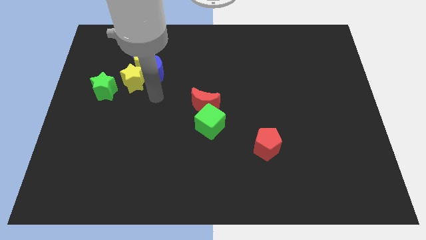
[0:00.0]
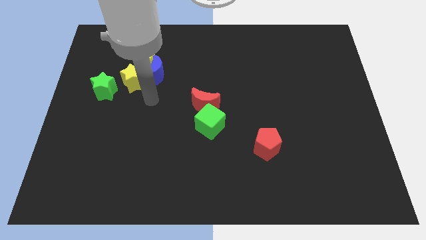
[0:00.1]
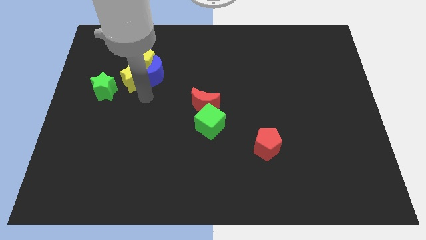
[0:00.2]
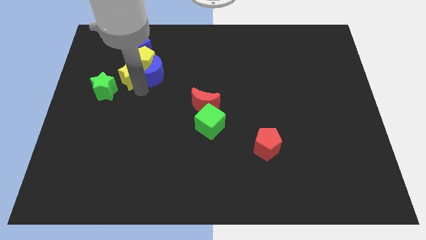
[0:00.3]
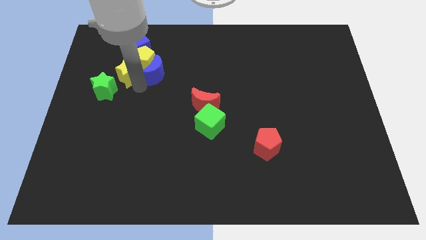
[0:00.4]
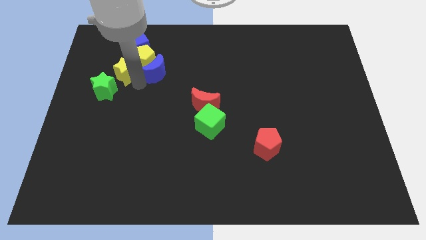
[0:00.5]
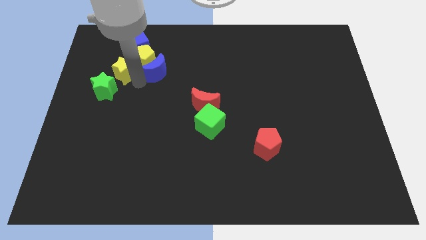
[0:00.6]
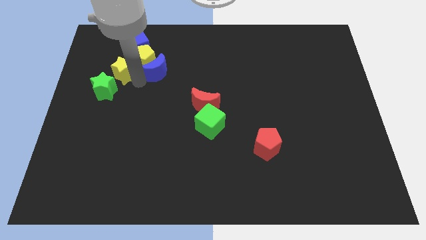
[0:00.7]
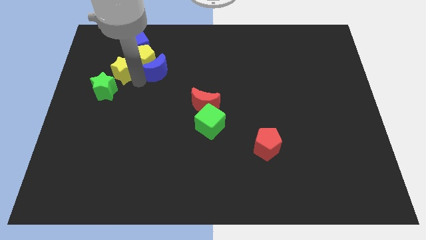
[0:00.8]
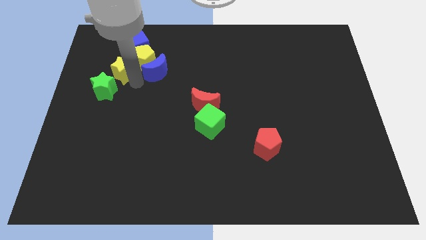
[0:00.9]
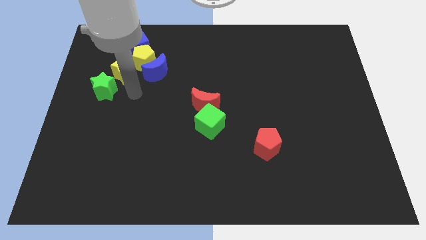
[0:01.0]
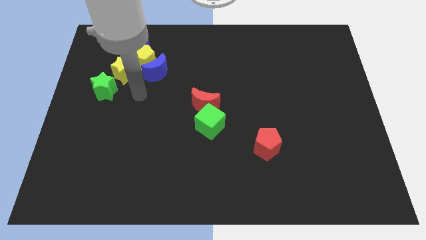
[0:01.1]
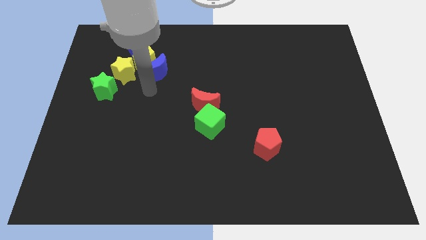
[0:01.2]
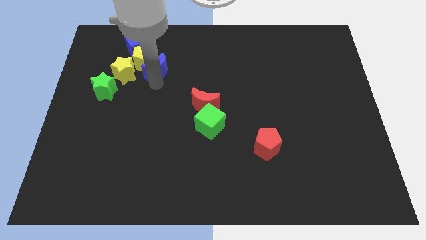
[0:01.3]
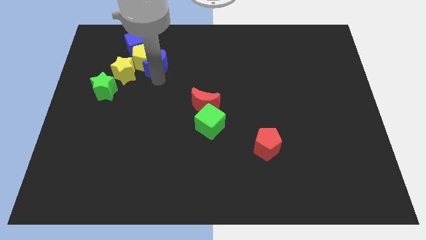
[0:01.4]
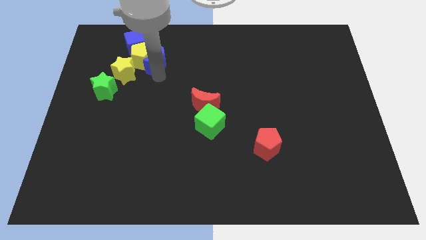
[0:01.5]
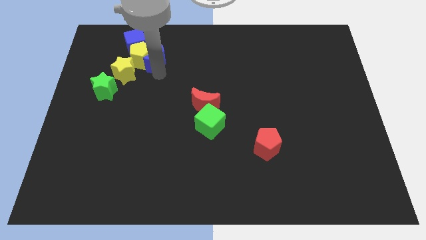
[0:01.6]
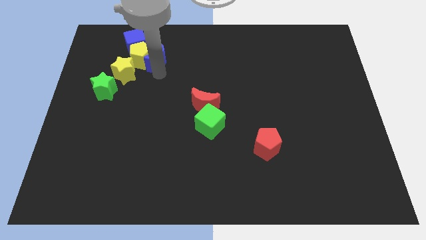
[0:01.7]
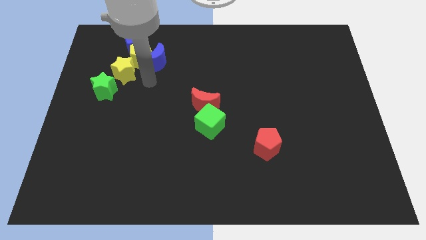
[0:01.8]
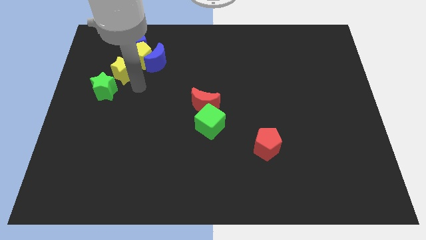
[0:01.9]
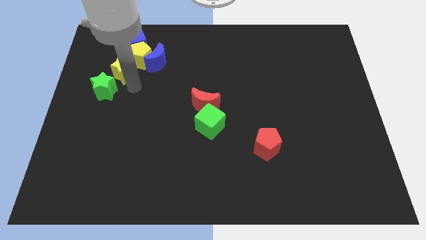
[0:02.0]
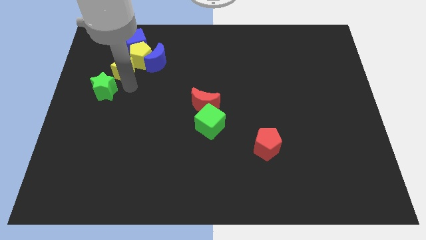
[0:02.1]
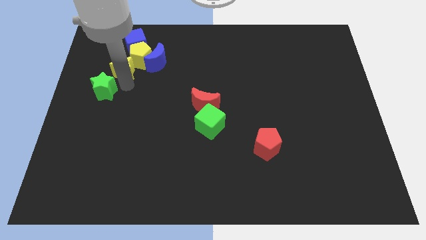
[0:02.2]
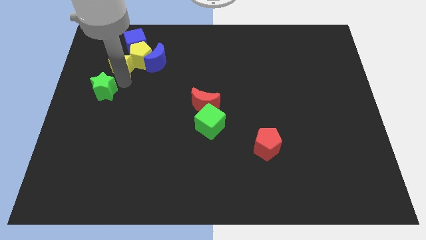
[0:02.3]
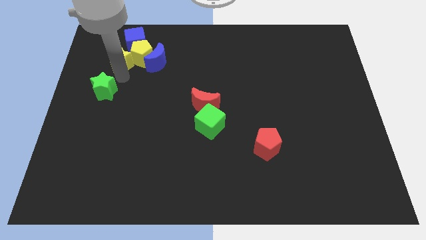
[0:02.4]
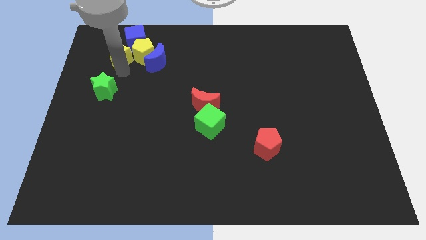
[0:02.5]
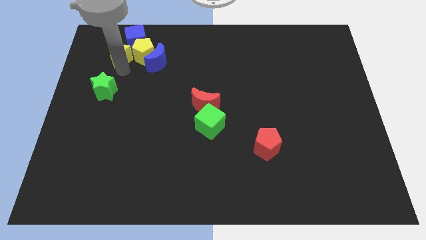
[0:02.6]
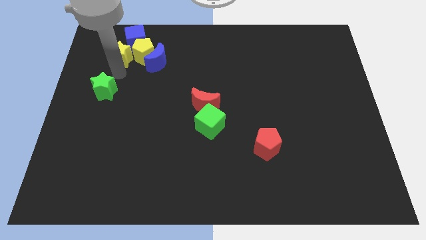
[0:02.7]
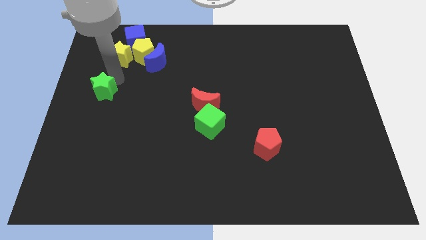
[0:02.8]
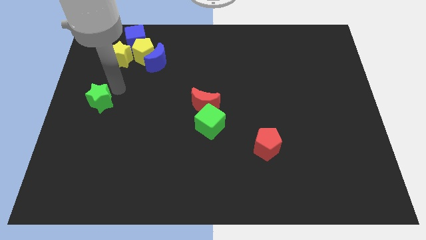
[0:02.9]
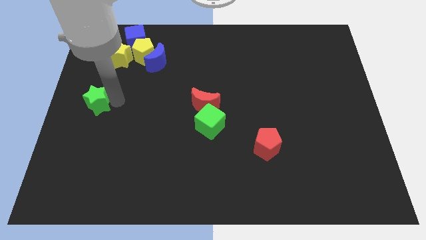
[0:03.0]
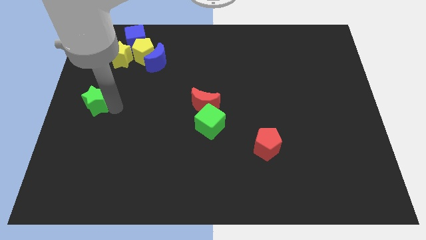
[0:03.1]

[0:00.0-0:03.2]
push the yellow pentagon and cube with blue crescent

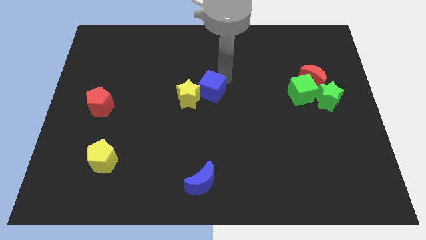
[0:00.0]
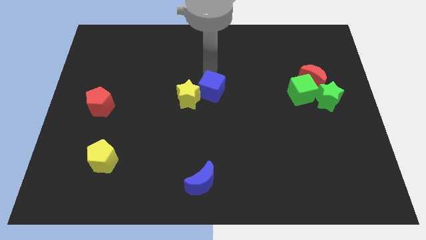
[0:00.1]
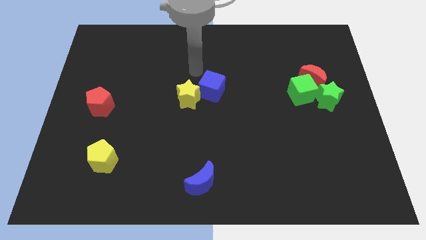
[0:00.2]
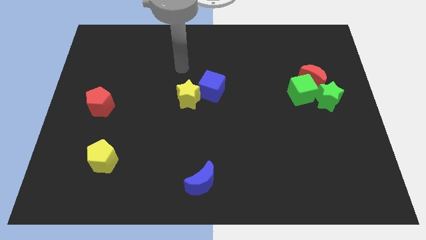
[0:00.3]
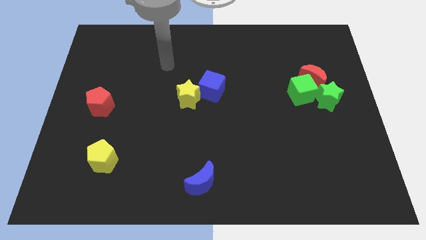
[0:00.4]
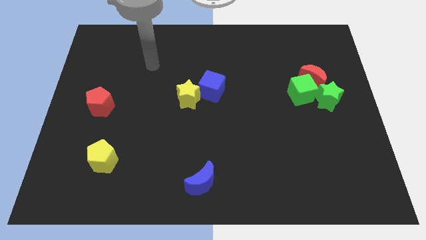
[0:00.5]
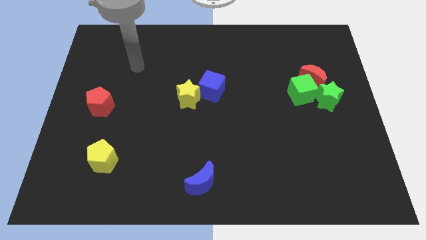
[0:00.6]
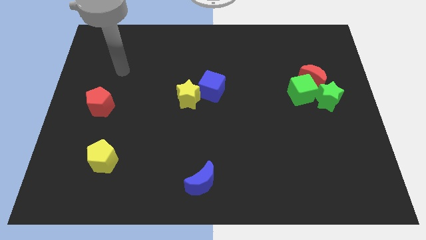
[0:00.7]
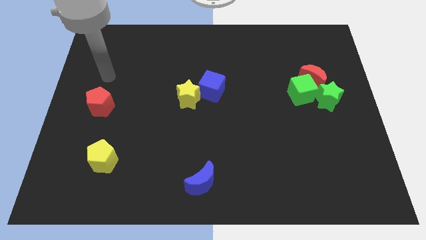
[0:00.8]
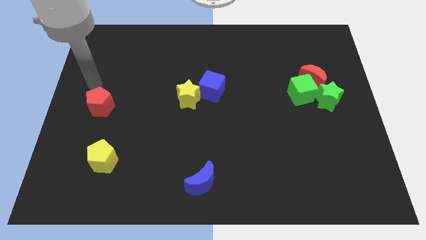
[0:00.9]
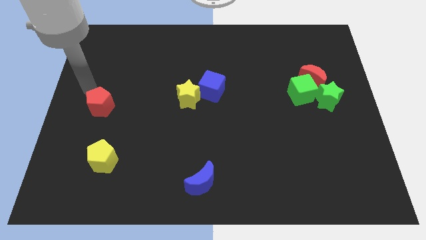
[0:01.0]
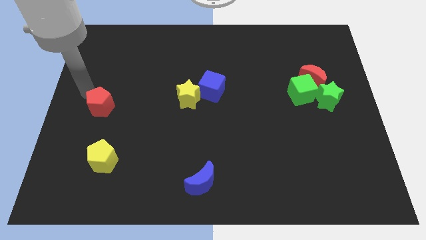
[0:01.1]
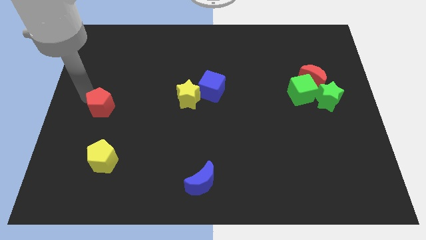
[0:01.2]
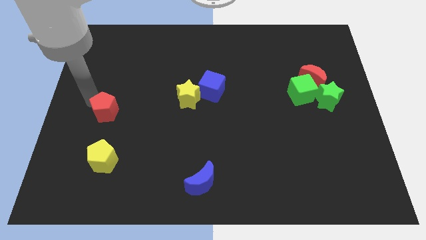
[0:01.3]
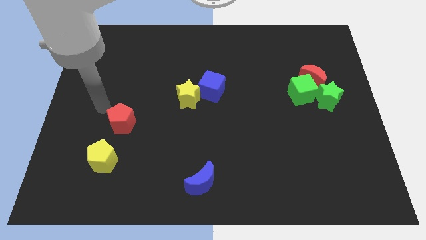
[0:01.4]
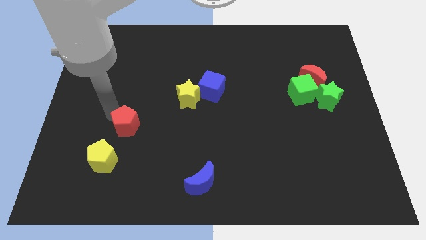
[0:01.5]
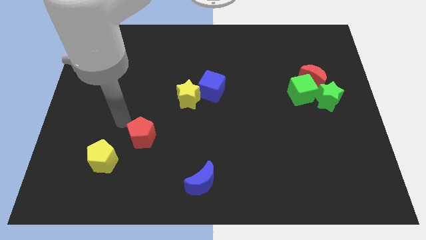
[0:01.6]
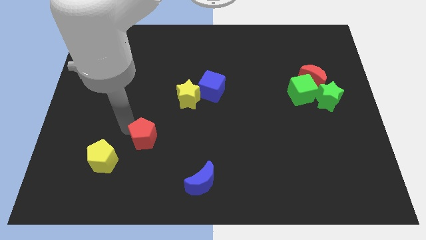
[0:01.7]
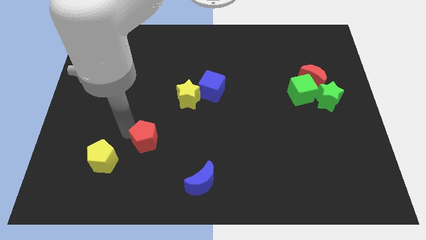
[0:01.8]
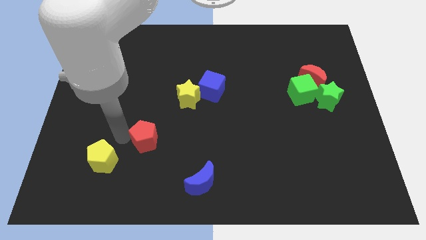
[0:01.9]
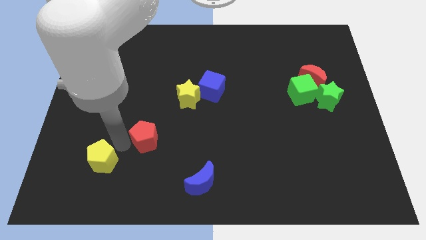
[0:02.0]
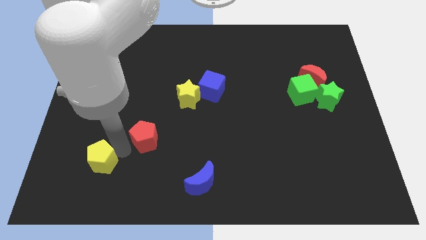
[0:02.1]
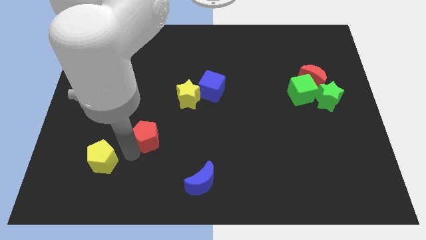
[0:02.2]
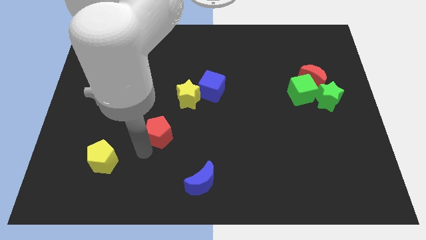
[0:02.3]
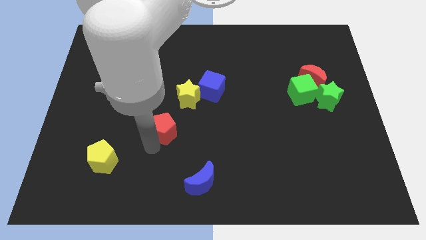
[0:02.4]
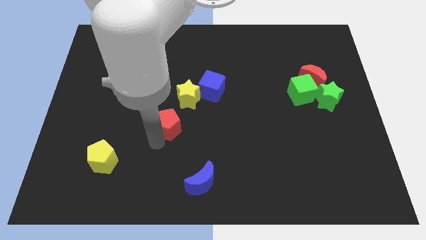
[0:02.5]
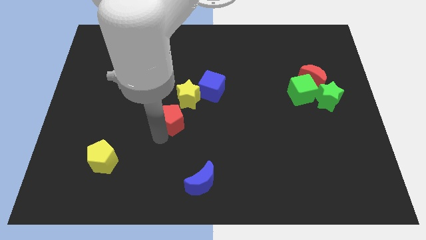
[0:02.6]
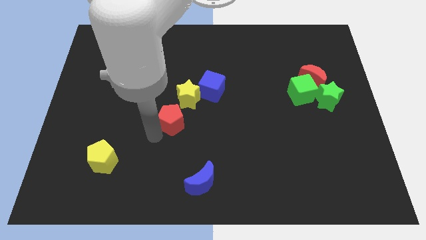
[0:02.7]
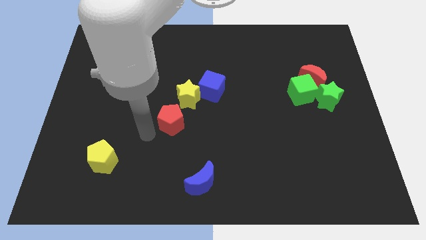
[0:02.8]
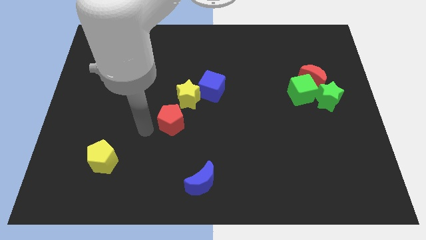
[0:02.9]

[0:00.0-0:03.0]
move the red pentagon near to the bottom side of the yellow star

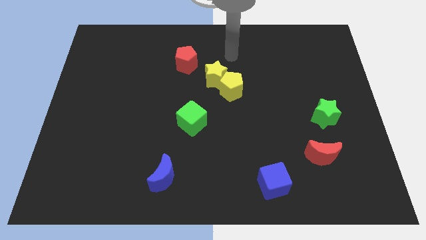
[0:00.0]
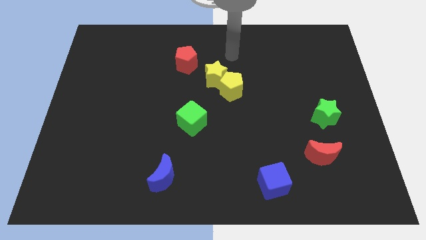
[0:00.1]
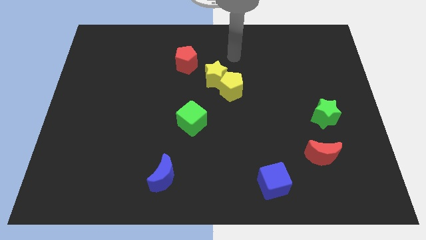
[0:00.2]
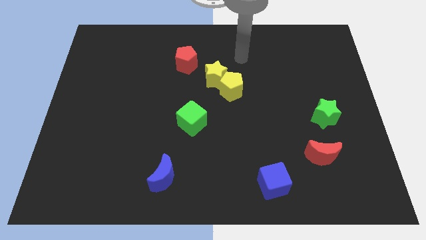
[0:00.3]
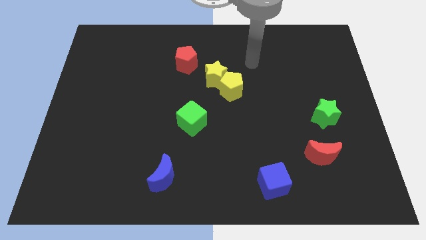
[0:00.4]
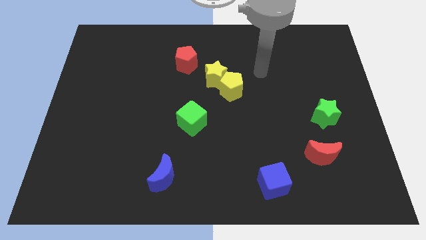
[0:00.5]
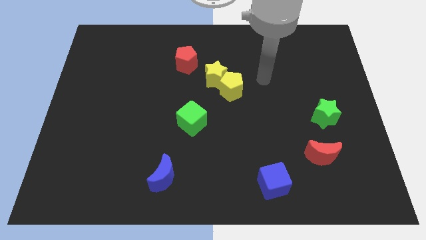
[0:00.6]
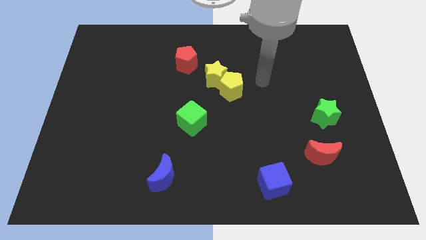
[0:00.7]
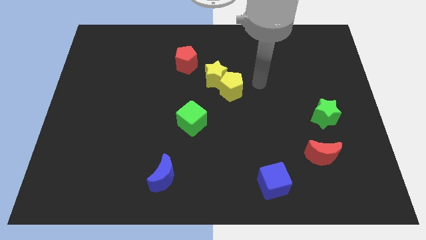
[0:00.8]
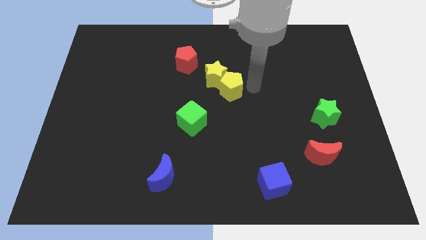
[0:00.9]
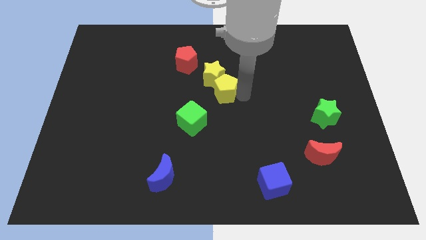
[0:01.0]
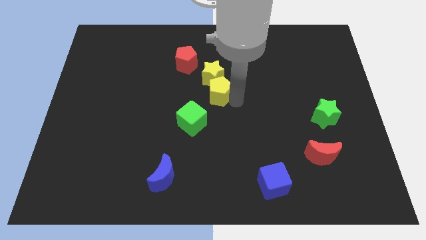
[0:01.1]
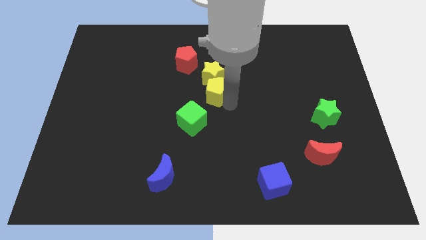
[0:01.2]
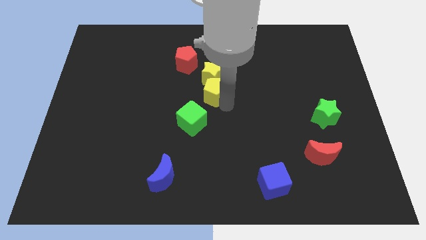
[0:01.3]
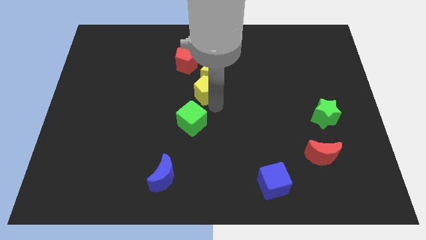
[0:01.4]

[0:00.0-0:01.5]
move the yellow pentagon slightly to the left

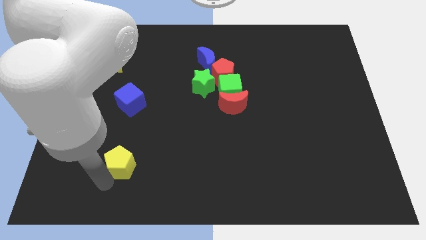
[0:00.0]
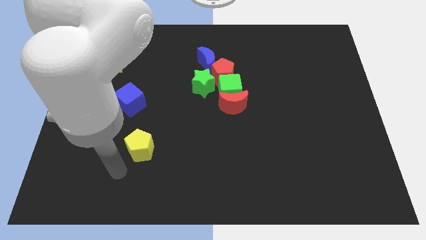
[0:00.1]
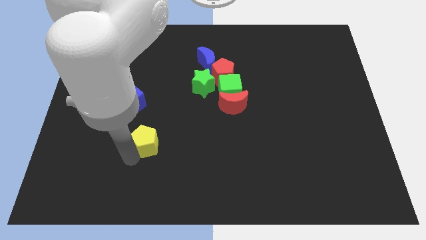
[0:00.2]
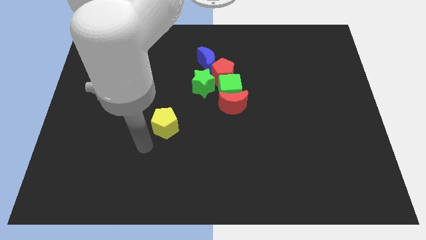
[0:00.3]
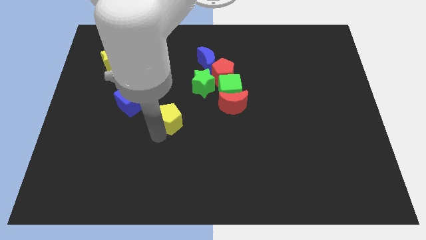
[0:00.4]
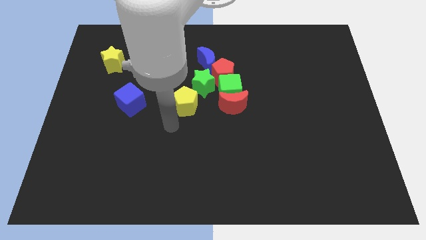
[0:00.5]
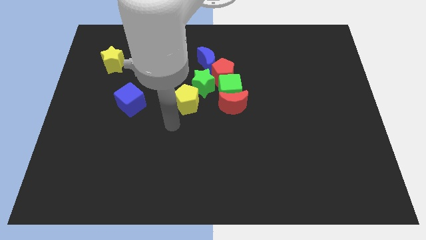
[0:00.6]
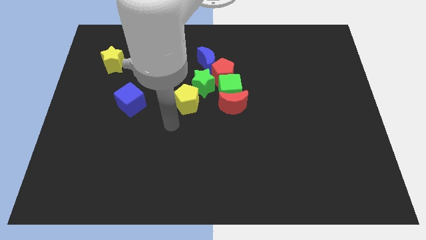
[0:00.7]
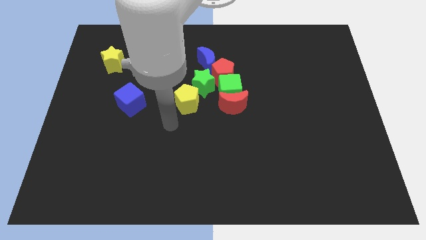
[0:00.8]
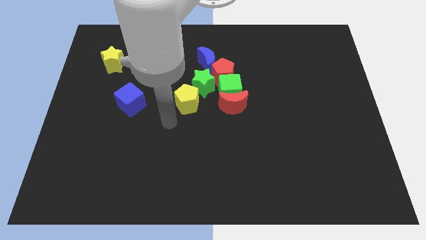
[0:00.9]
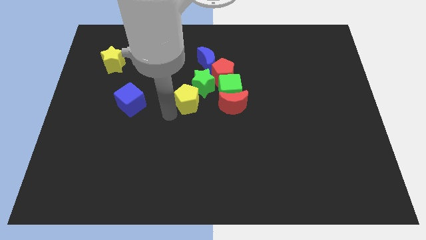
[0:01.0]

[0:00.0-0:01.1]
move the yellow pentagon close to the green star
